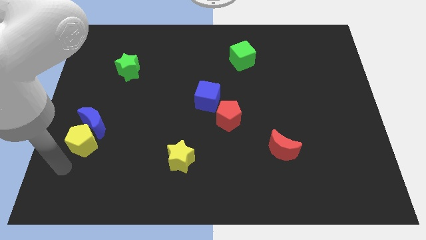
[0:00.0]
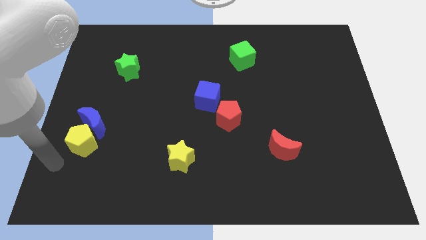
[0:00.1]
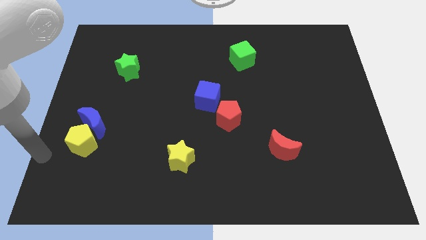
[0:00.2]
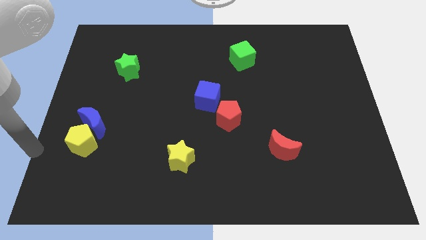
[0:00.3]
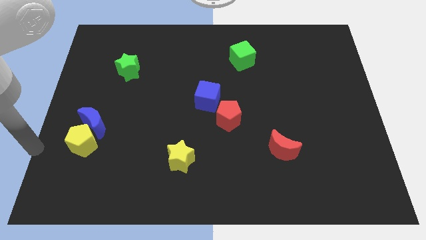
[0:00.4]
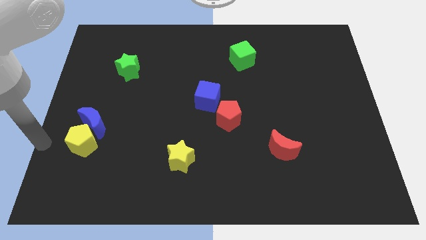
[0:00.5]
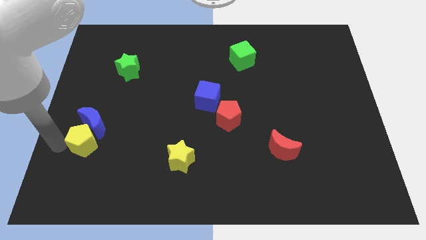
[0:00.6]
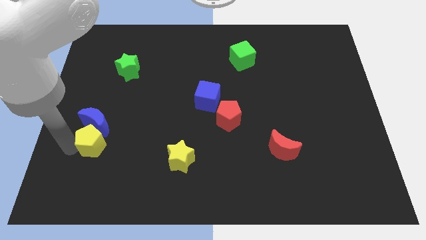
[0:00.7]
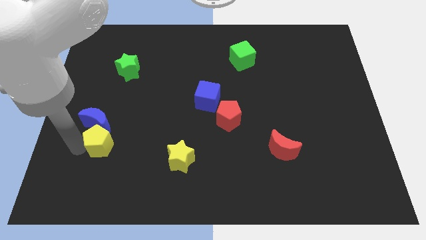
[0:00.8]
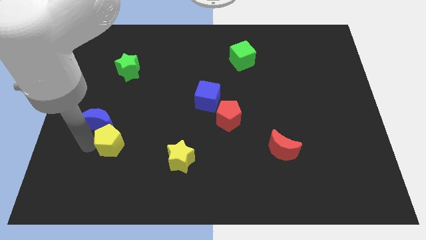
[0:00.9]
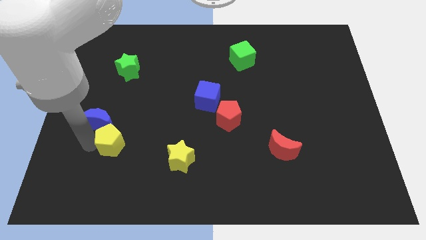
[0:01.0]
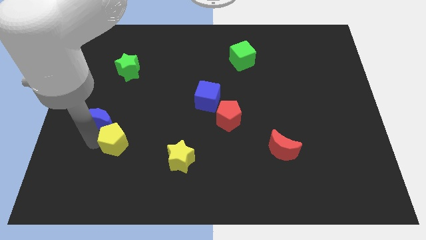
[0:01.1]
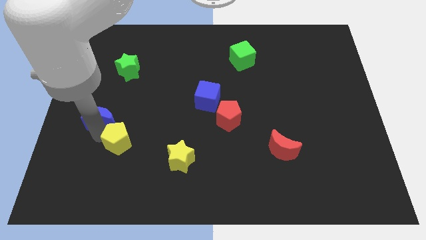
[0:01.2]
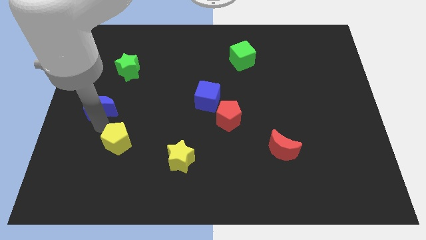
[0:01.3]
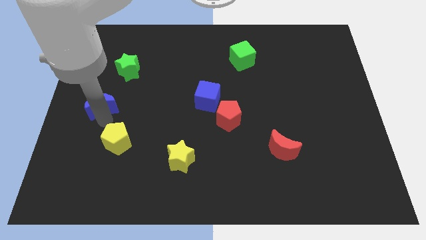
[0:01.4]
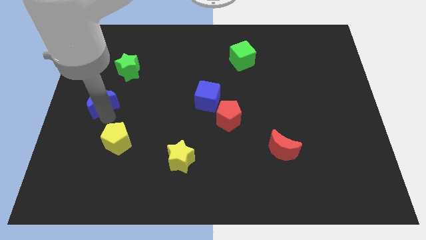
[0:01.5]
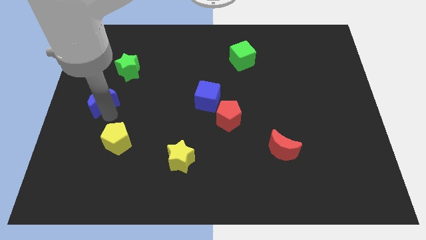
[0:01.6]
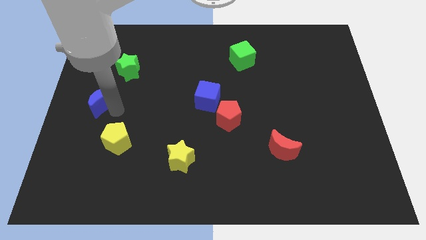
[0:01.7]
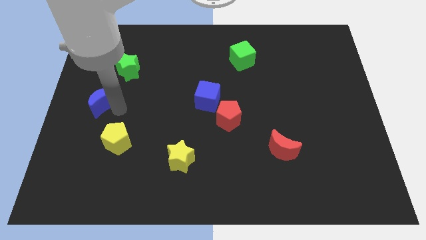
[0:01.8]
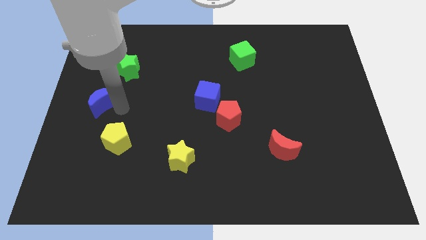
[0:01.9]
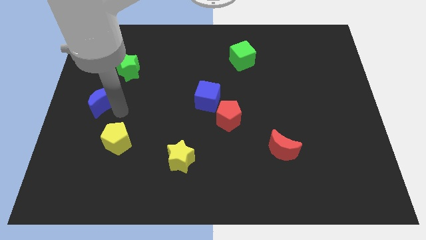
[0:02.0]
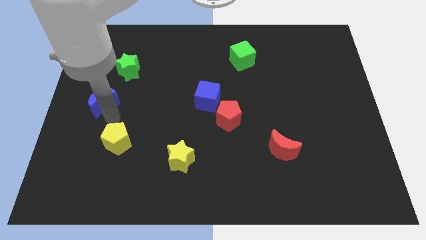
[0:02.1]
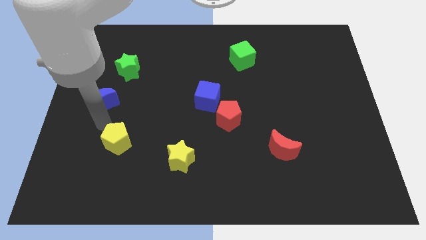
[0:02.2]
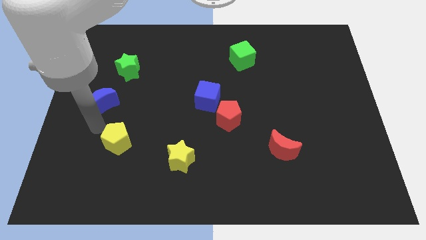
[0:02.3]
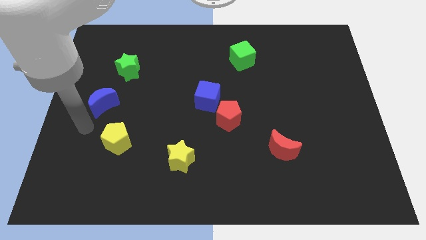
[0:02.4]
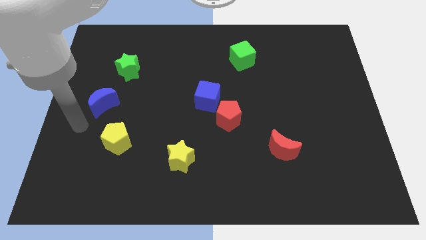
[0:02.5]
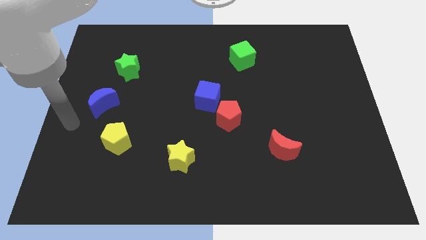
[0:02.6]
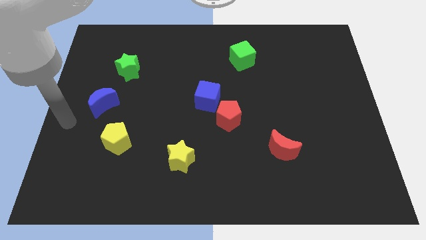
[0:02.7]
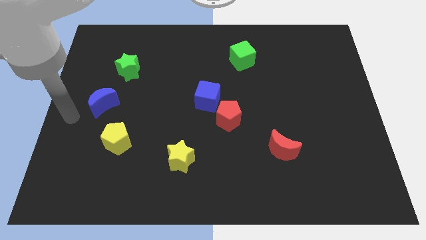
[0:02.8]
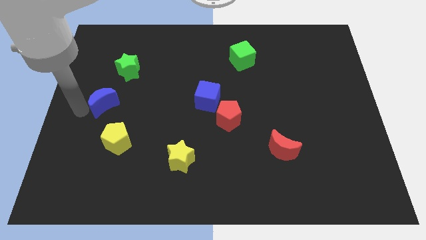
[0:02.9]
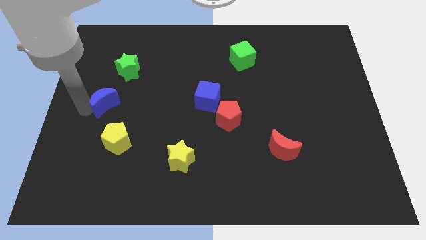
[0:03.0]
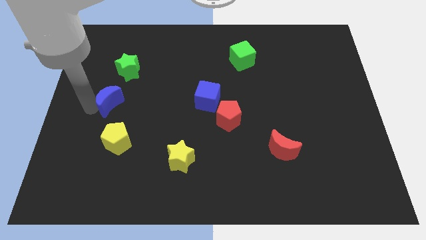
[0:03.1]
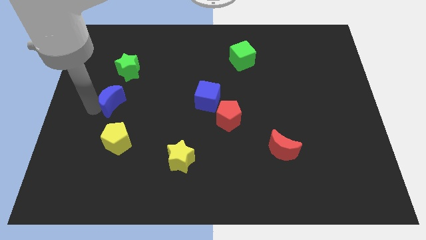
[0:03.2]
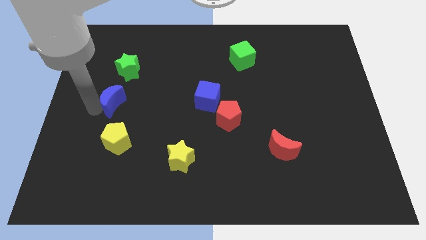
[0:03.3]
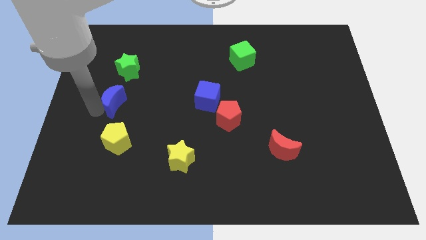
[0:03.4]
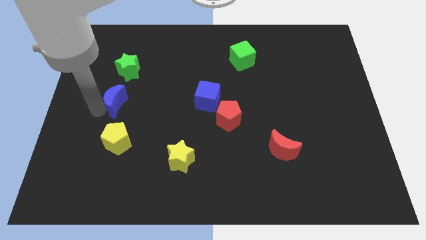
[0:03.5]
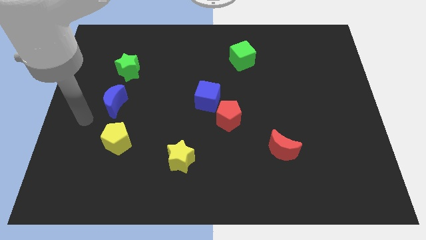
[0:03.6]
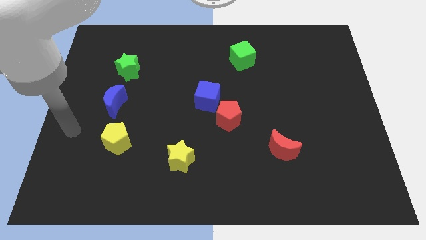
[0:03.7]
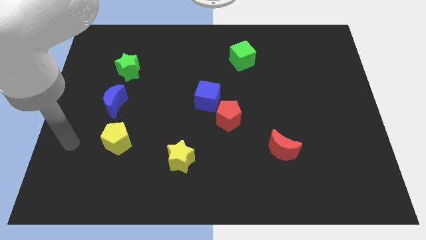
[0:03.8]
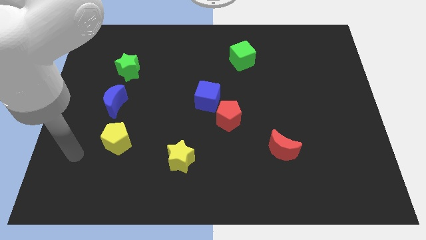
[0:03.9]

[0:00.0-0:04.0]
separate the yellow pentagon and blue moon

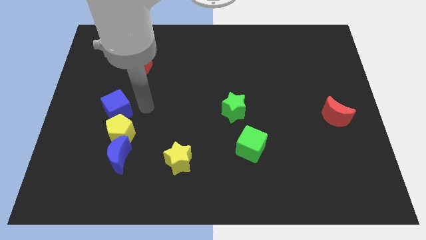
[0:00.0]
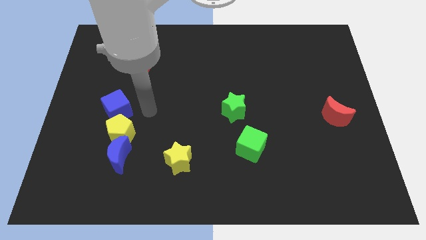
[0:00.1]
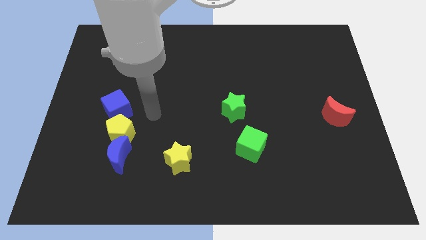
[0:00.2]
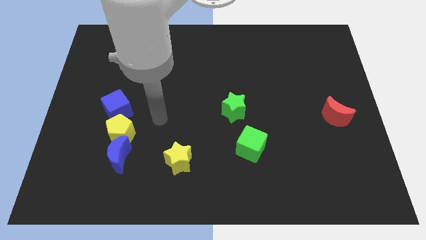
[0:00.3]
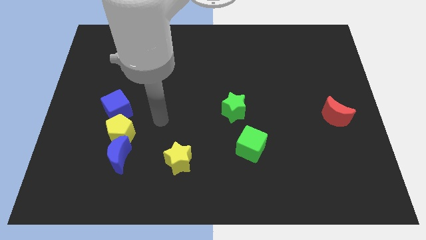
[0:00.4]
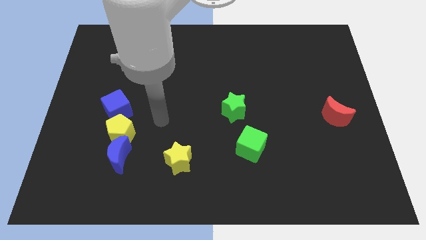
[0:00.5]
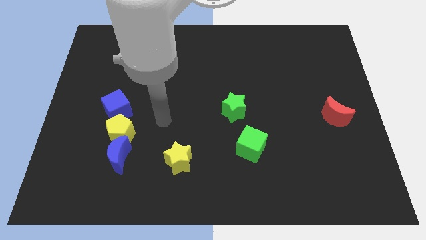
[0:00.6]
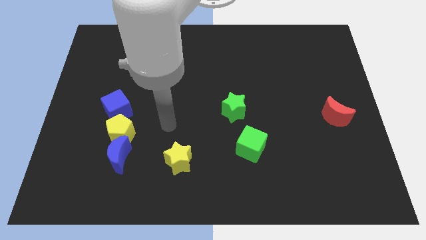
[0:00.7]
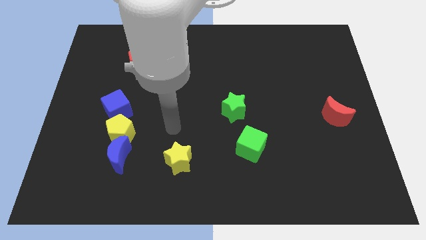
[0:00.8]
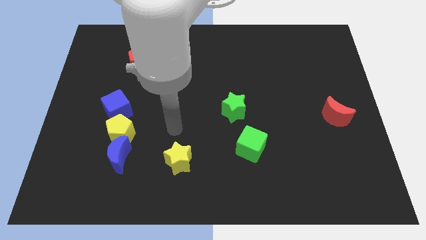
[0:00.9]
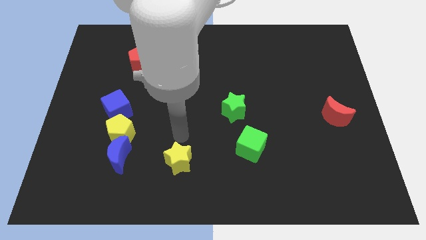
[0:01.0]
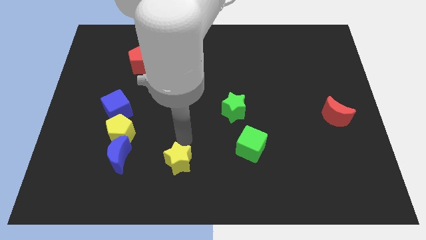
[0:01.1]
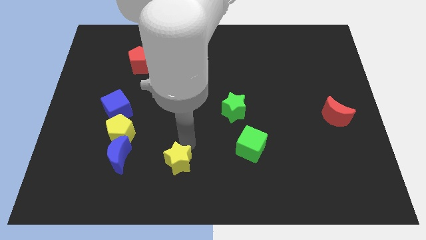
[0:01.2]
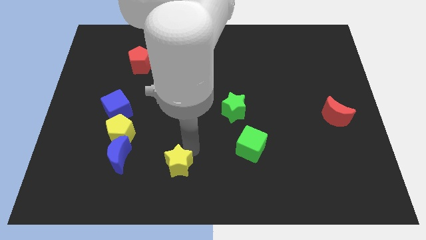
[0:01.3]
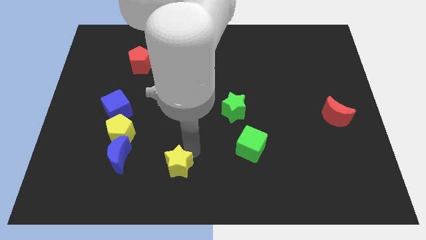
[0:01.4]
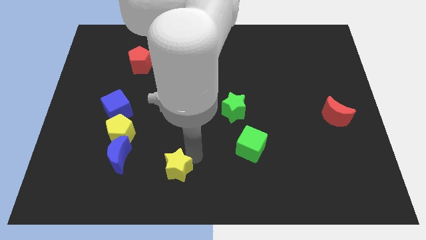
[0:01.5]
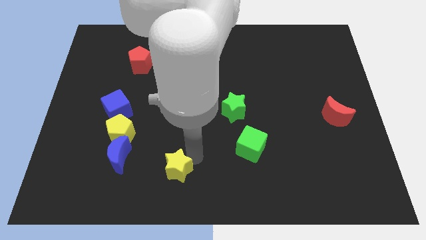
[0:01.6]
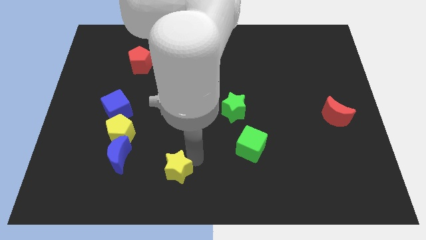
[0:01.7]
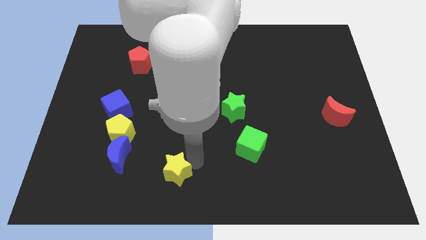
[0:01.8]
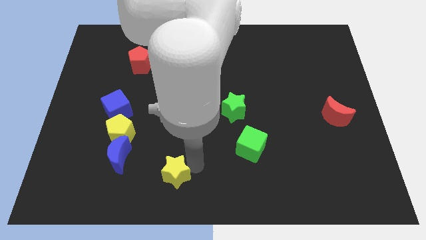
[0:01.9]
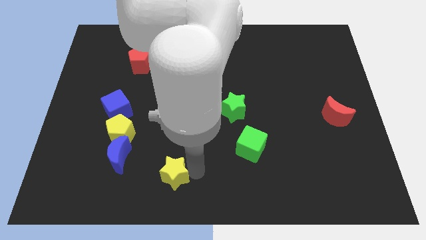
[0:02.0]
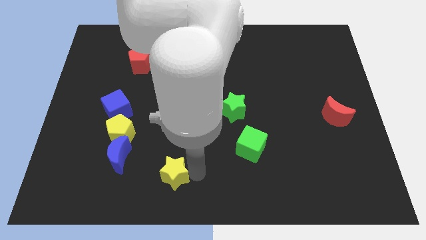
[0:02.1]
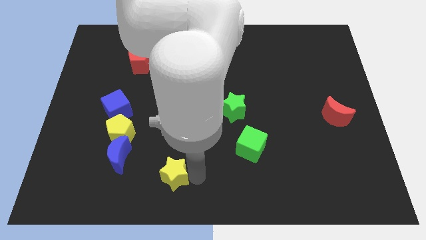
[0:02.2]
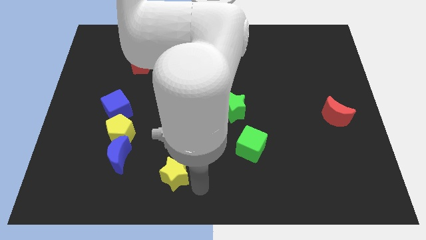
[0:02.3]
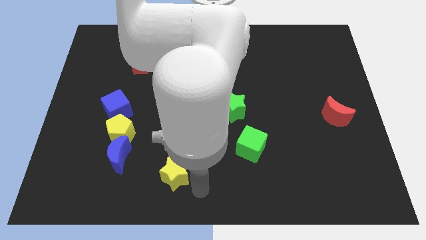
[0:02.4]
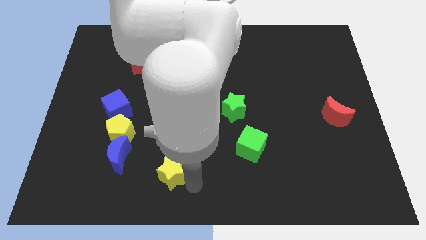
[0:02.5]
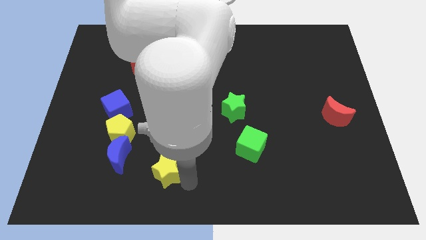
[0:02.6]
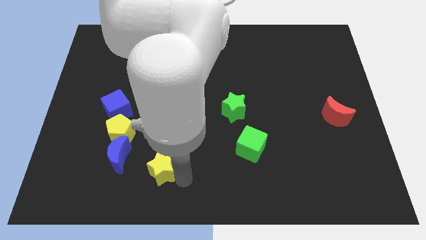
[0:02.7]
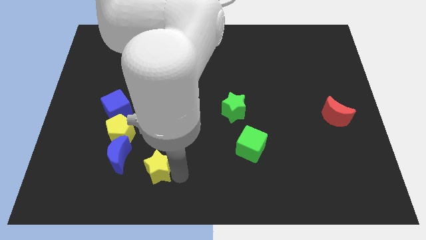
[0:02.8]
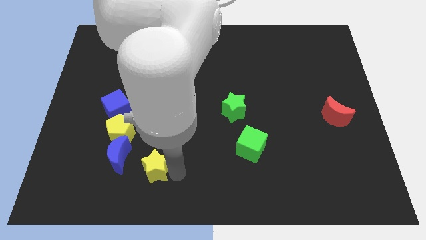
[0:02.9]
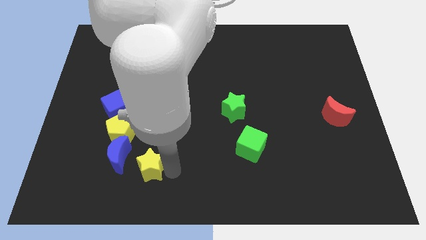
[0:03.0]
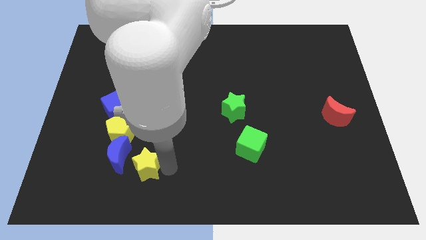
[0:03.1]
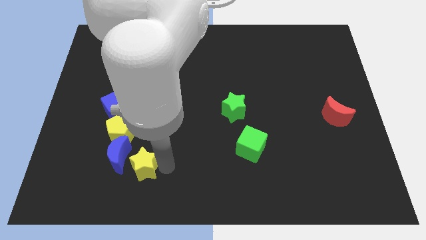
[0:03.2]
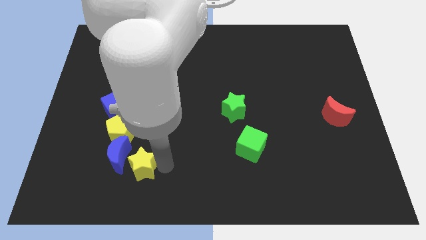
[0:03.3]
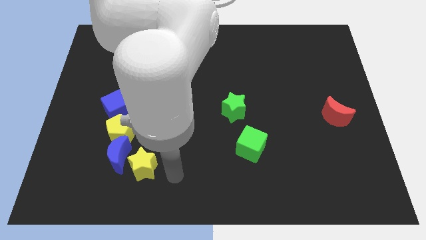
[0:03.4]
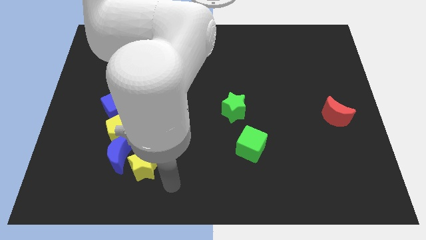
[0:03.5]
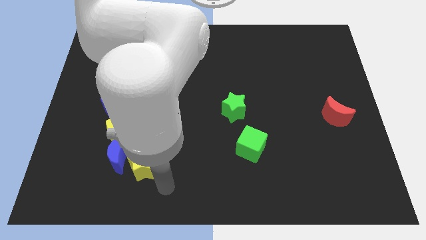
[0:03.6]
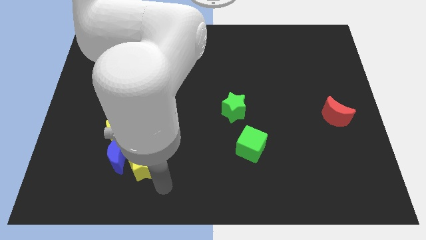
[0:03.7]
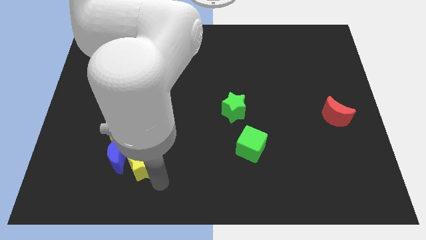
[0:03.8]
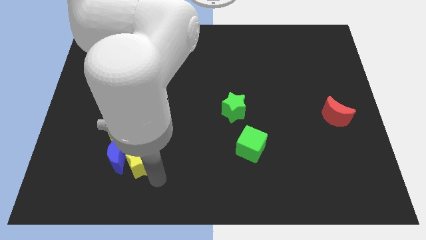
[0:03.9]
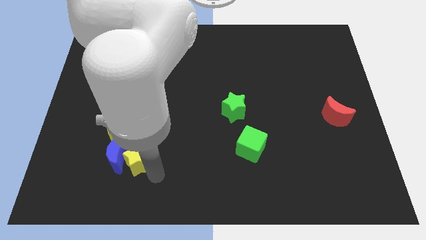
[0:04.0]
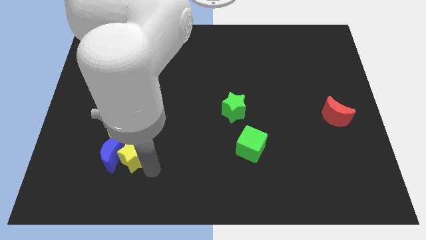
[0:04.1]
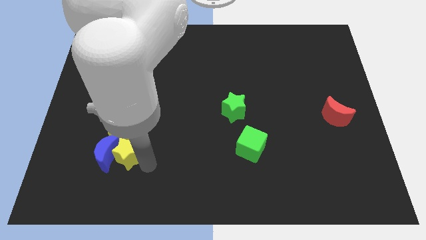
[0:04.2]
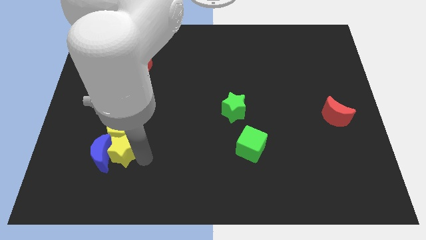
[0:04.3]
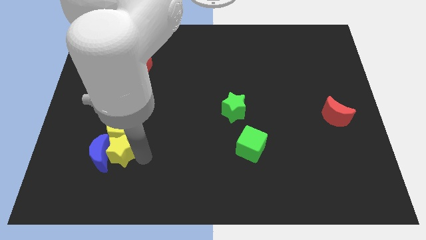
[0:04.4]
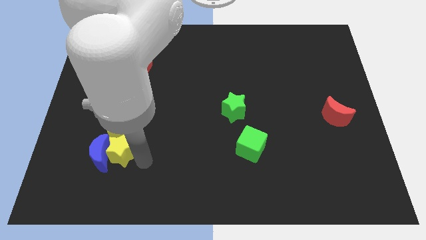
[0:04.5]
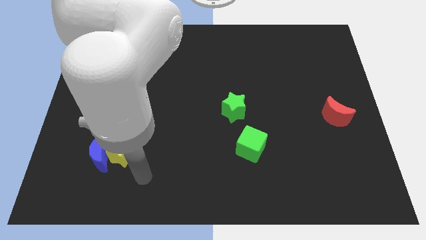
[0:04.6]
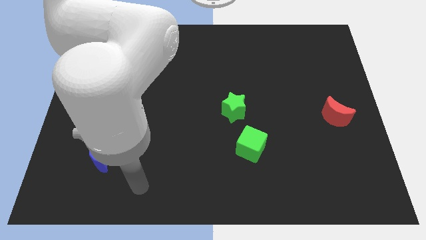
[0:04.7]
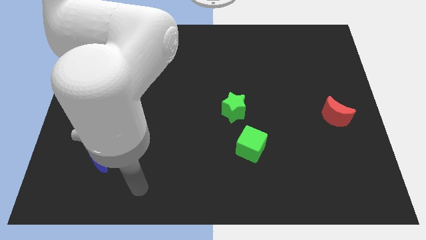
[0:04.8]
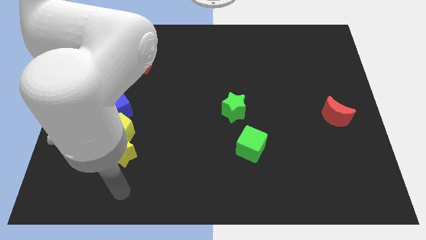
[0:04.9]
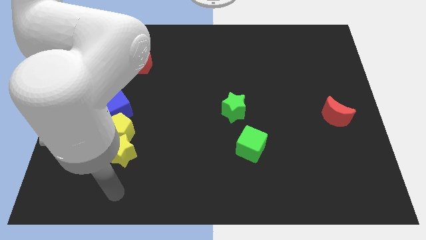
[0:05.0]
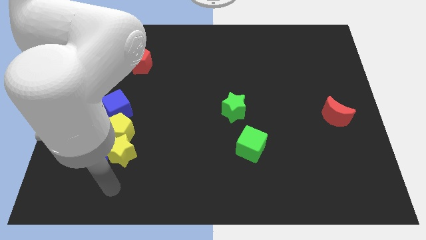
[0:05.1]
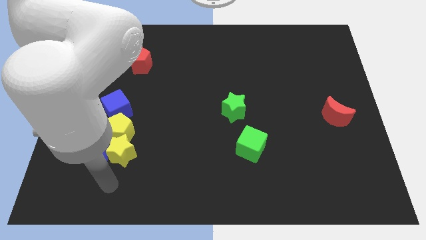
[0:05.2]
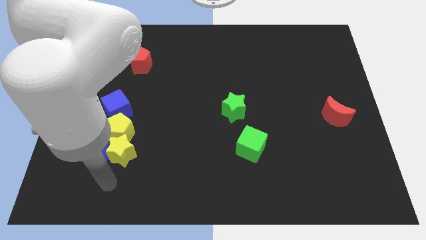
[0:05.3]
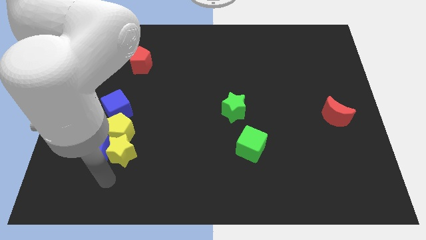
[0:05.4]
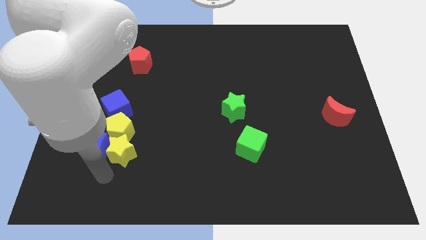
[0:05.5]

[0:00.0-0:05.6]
push the yellow star into the blue moon
